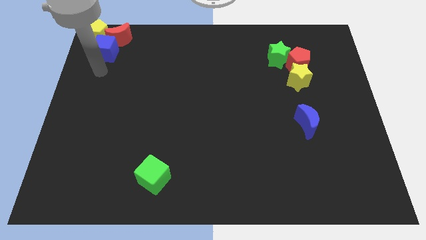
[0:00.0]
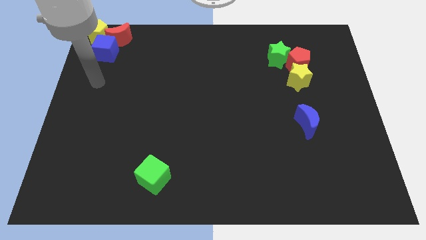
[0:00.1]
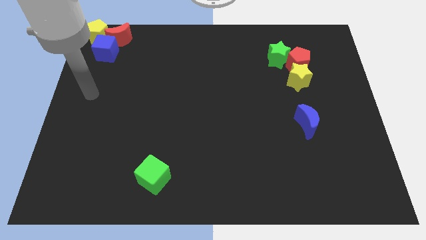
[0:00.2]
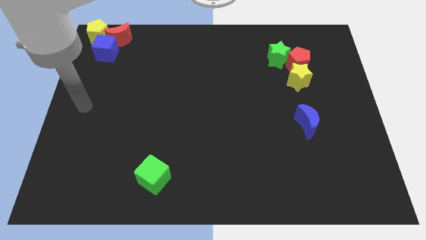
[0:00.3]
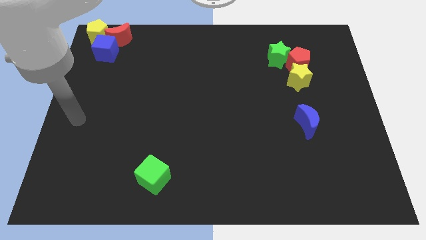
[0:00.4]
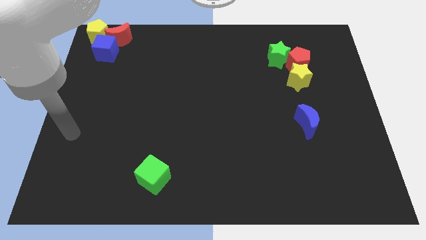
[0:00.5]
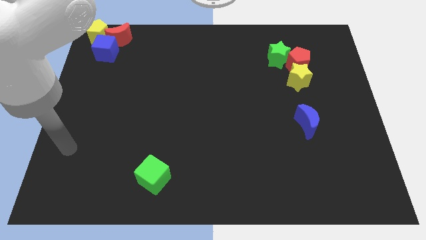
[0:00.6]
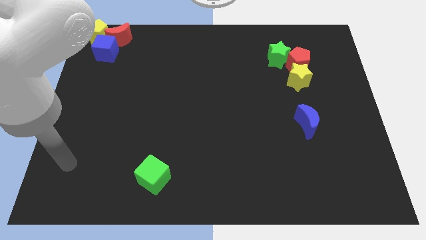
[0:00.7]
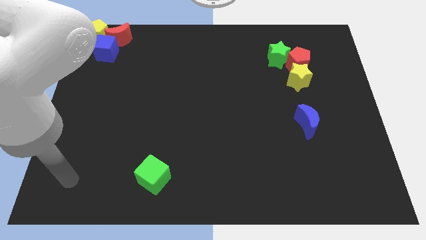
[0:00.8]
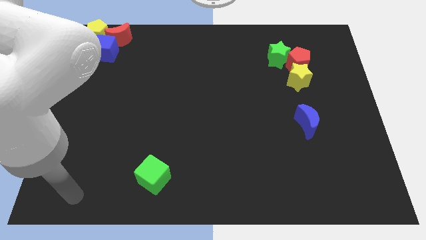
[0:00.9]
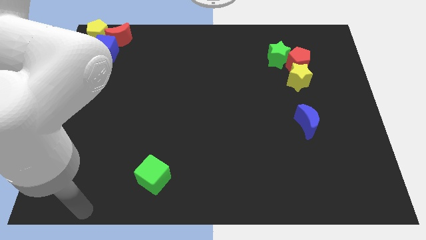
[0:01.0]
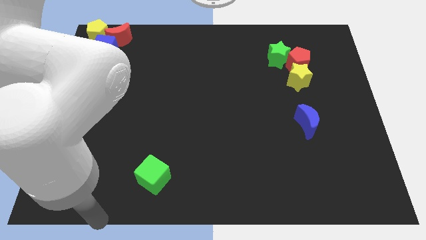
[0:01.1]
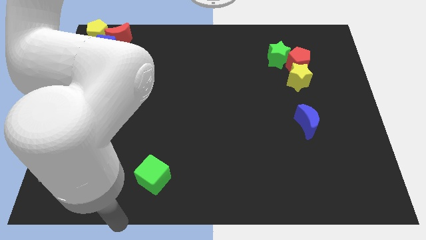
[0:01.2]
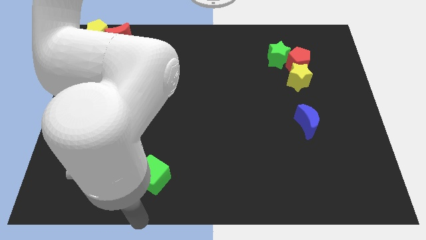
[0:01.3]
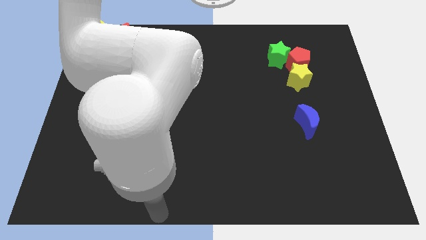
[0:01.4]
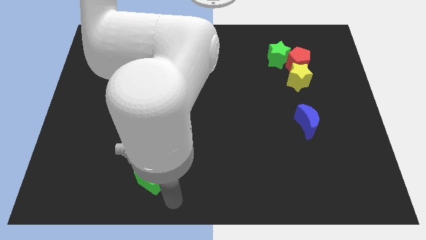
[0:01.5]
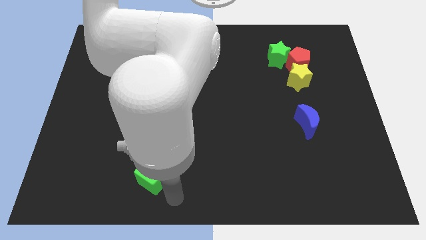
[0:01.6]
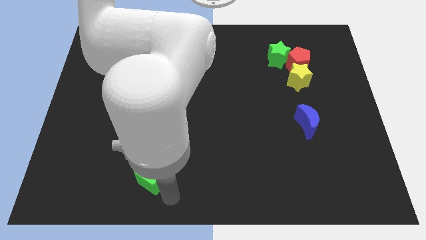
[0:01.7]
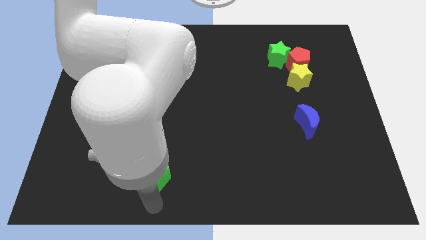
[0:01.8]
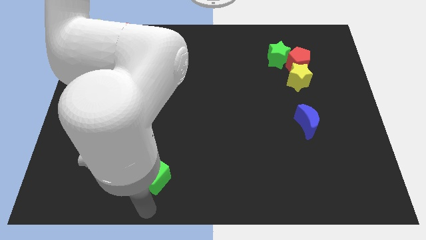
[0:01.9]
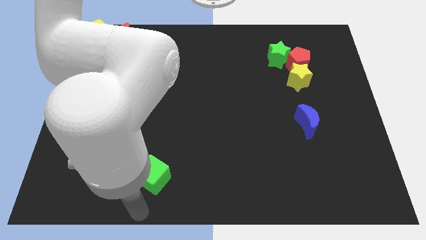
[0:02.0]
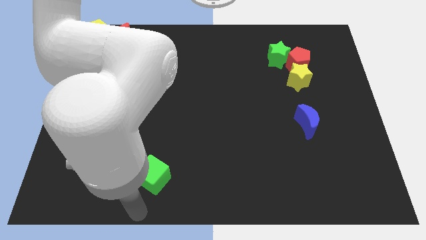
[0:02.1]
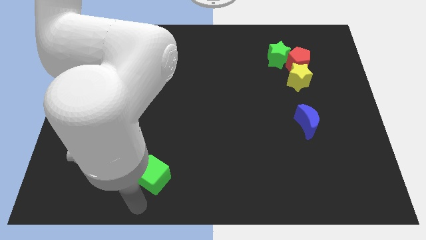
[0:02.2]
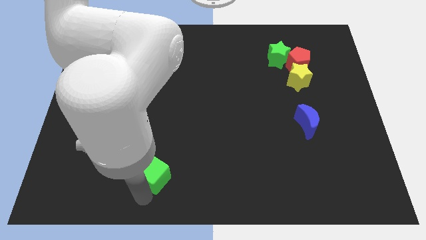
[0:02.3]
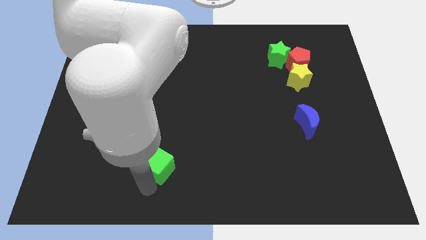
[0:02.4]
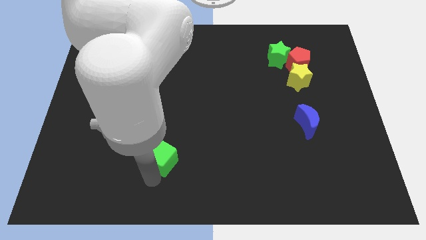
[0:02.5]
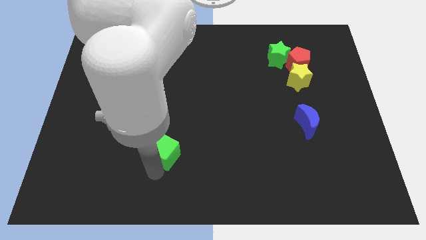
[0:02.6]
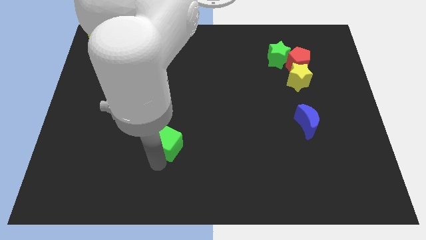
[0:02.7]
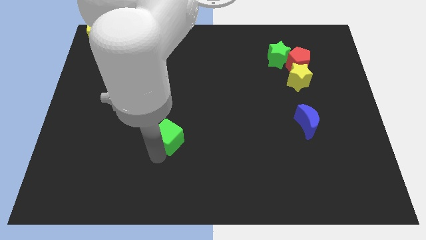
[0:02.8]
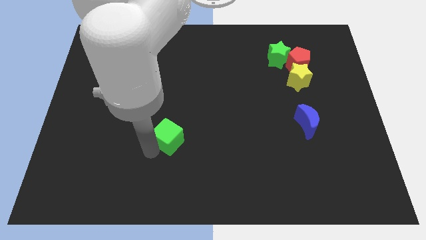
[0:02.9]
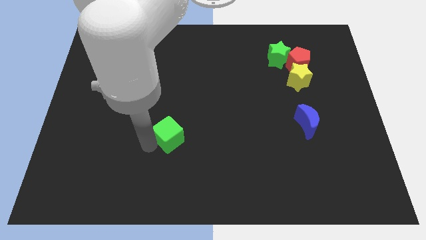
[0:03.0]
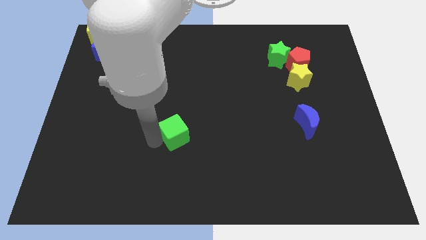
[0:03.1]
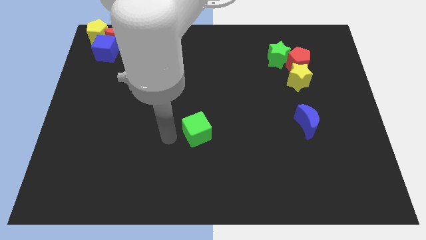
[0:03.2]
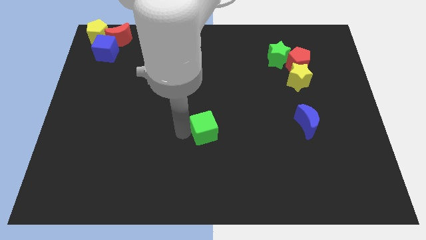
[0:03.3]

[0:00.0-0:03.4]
move the green cube horizontally left to the blue moon

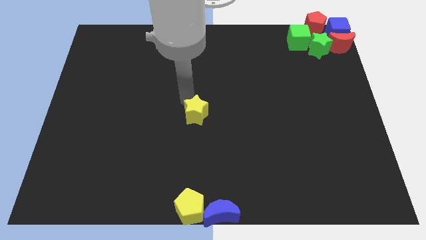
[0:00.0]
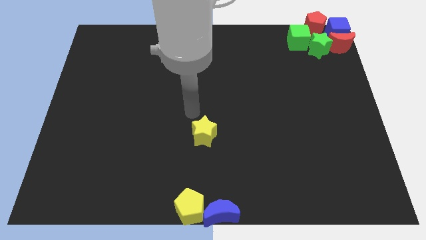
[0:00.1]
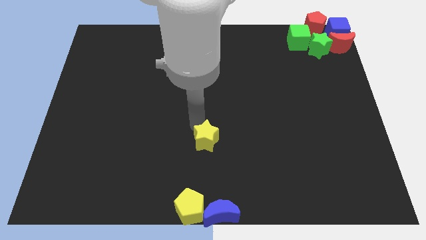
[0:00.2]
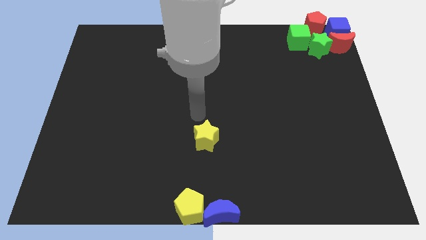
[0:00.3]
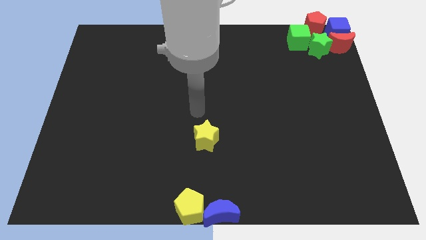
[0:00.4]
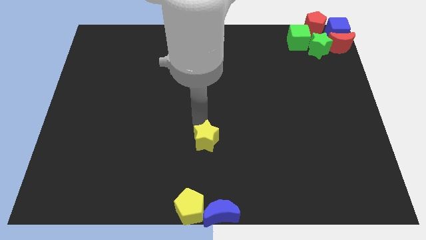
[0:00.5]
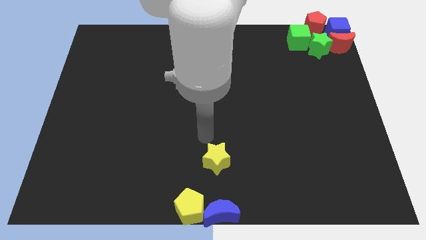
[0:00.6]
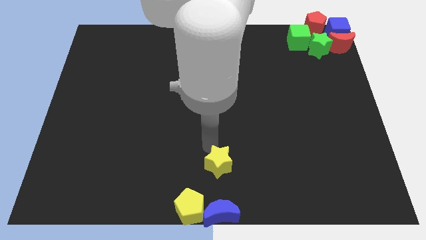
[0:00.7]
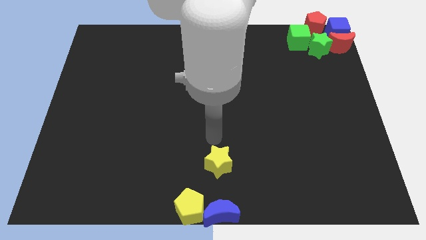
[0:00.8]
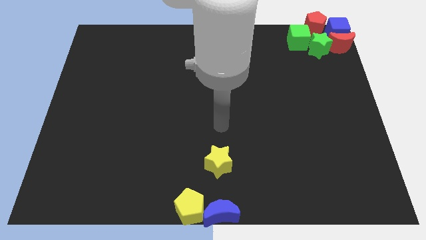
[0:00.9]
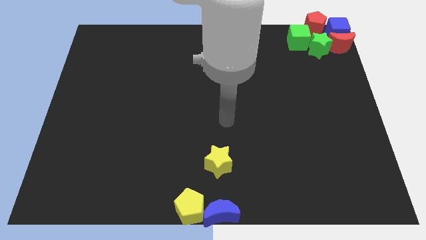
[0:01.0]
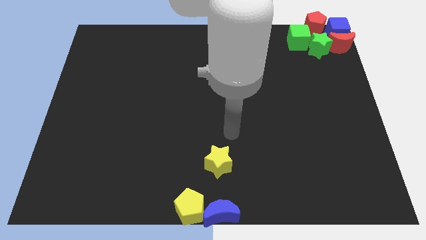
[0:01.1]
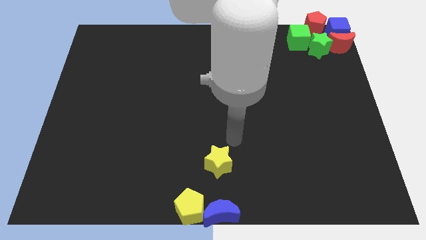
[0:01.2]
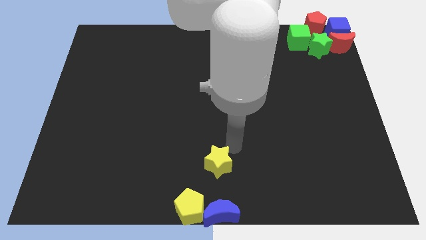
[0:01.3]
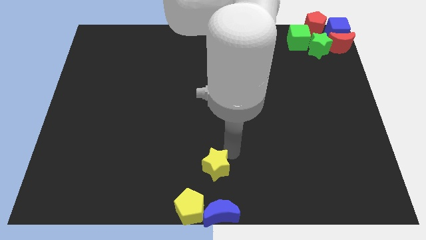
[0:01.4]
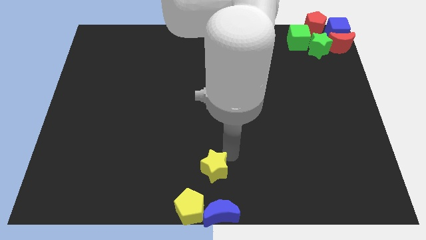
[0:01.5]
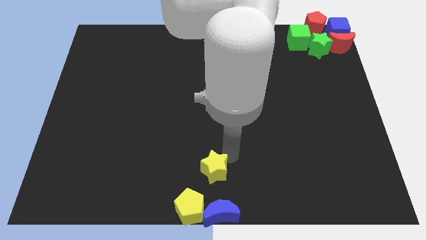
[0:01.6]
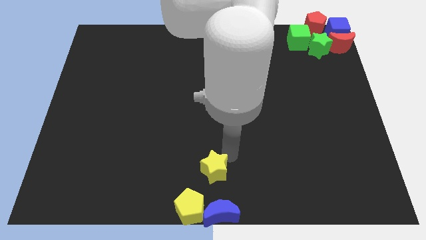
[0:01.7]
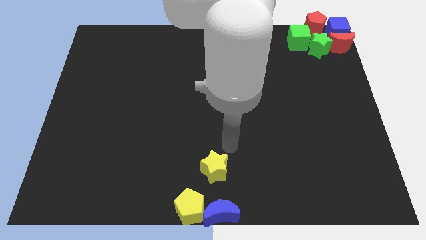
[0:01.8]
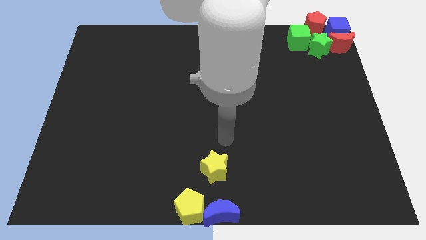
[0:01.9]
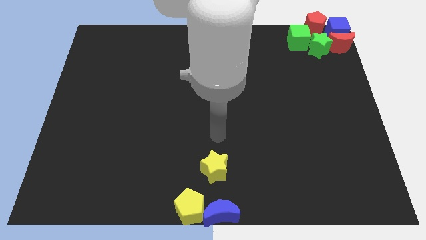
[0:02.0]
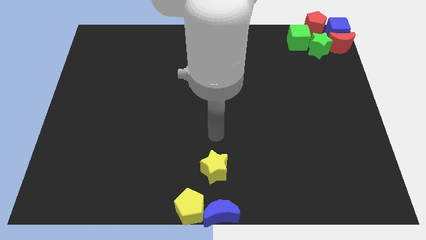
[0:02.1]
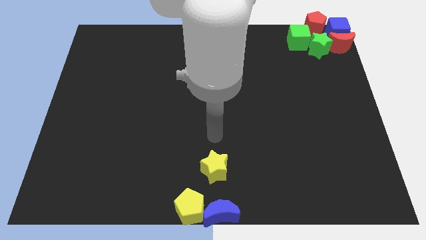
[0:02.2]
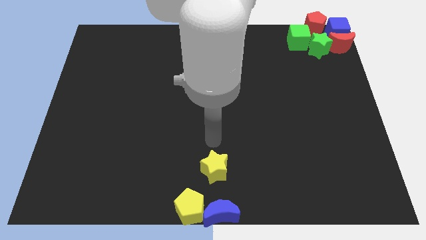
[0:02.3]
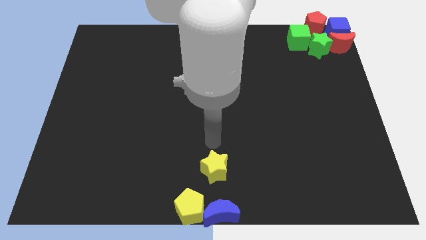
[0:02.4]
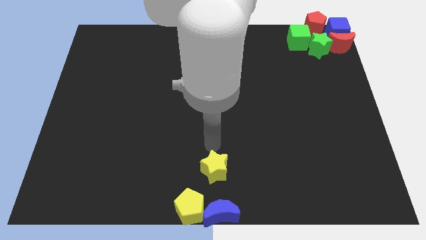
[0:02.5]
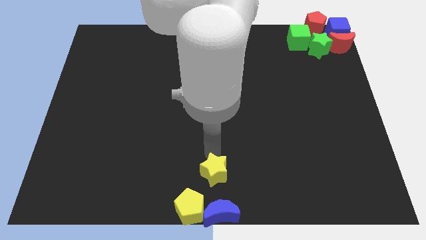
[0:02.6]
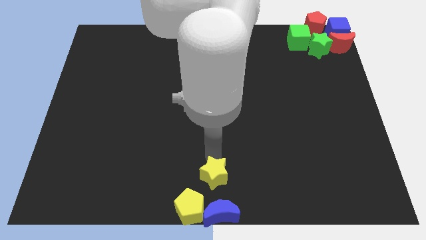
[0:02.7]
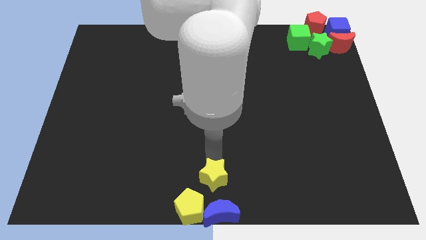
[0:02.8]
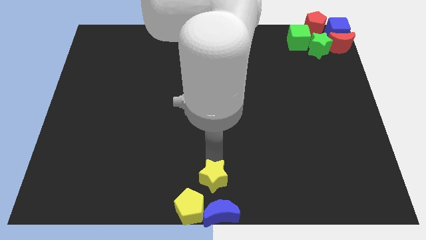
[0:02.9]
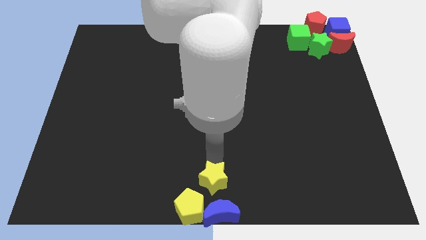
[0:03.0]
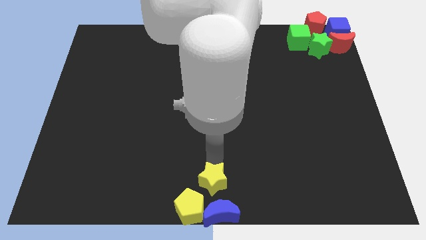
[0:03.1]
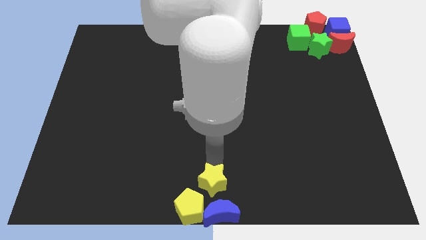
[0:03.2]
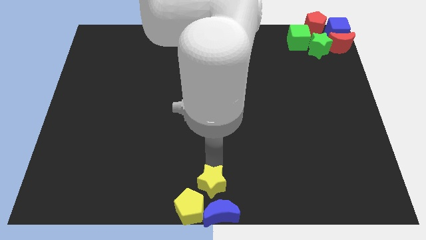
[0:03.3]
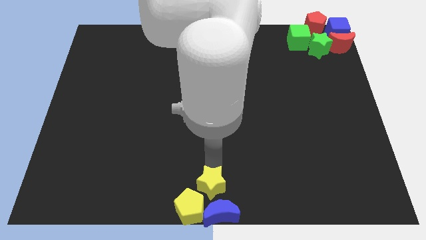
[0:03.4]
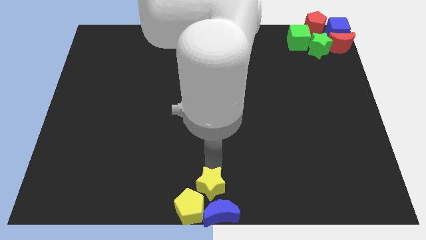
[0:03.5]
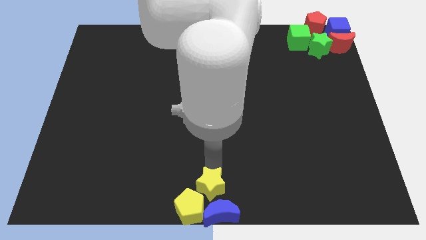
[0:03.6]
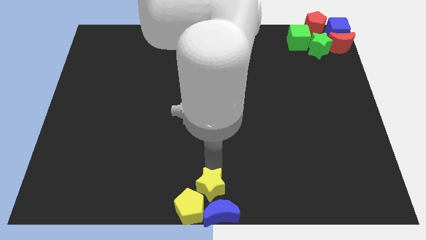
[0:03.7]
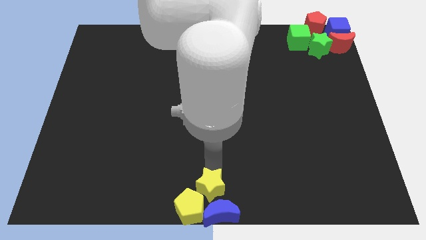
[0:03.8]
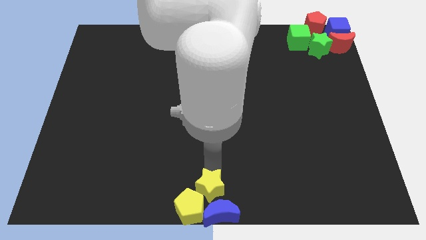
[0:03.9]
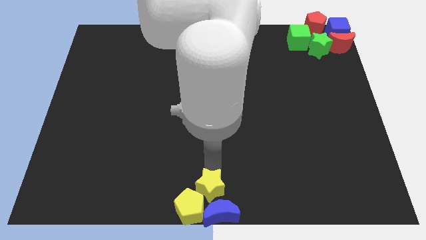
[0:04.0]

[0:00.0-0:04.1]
place the yellow star on top of blue and yellow blocks at the bottom

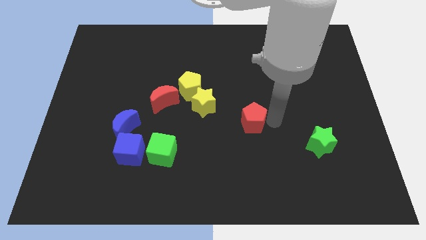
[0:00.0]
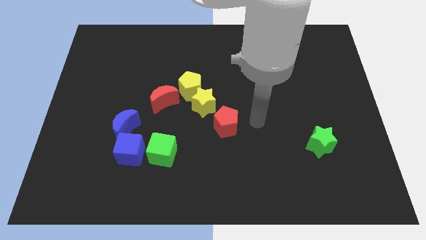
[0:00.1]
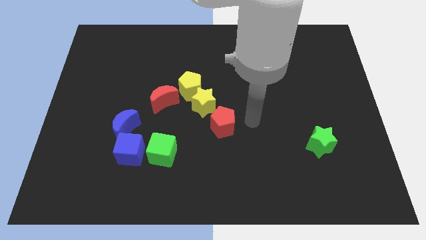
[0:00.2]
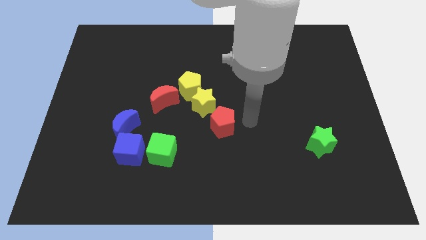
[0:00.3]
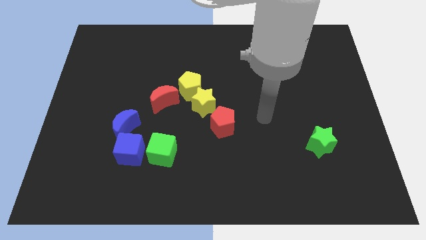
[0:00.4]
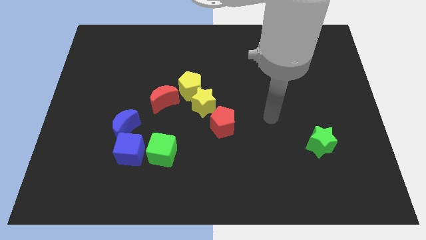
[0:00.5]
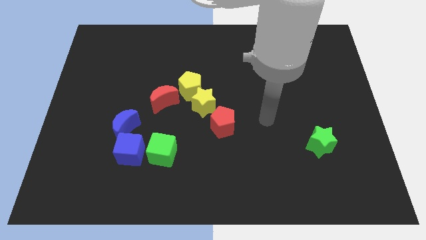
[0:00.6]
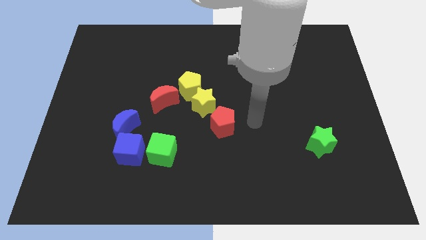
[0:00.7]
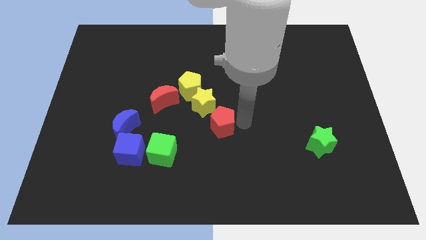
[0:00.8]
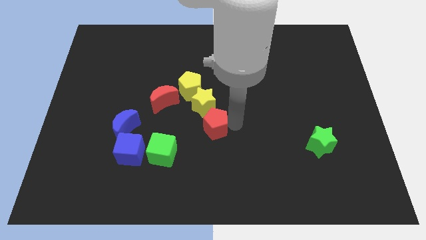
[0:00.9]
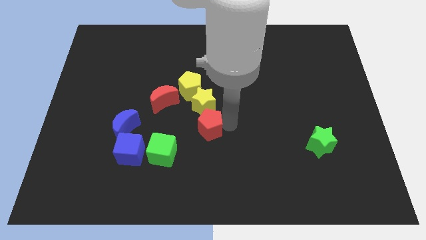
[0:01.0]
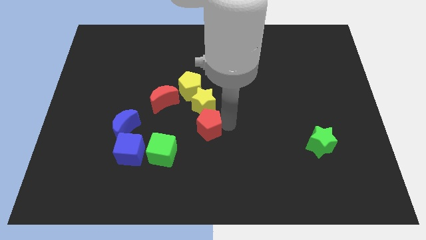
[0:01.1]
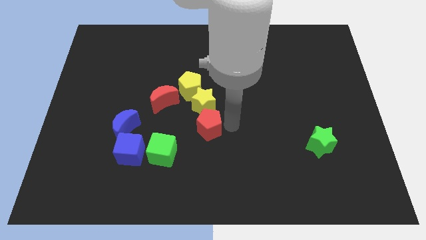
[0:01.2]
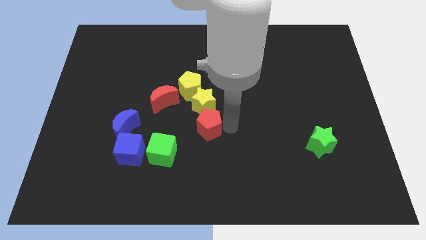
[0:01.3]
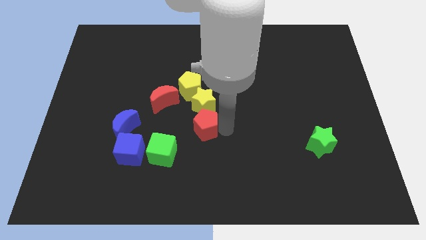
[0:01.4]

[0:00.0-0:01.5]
move the red pentagon towards the bottom of the yellow star
